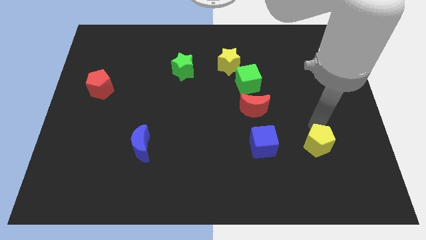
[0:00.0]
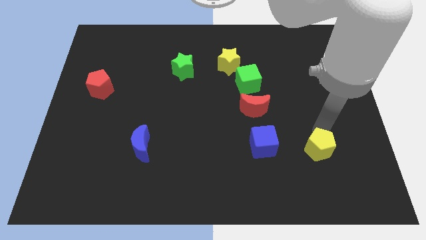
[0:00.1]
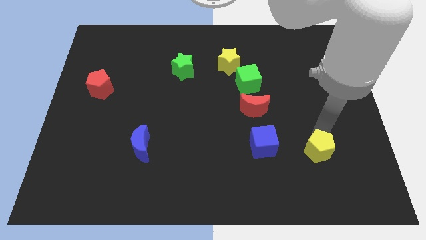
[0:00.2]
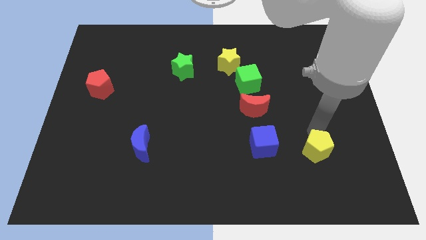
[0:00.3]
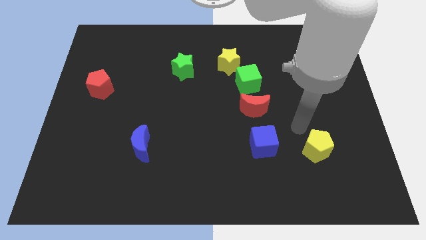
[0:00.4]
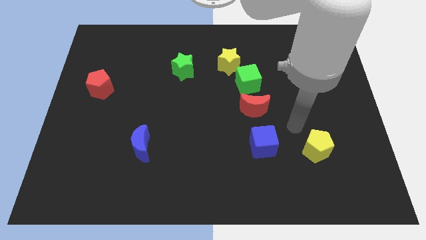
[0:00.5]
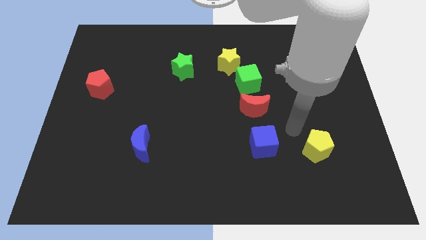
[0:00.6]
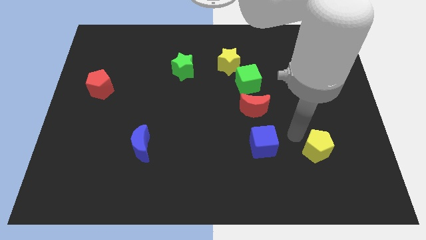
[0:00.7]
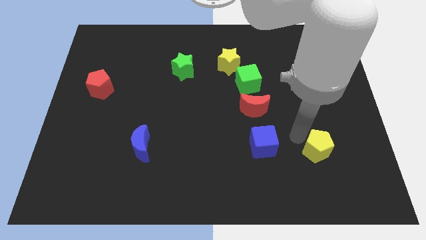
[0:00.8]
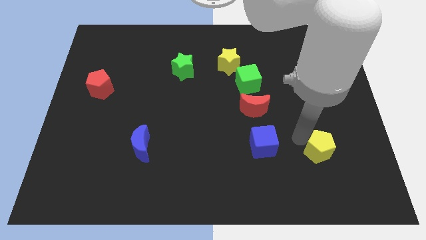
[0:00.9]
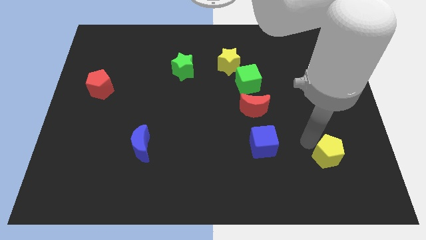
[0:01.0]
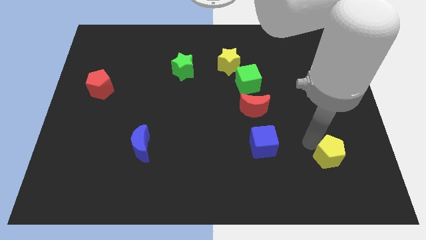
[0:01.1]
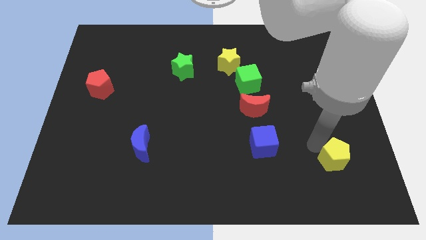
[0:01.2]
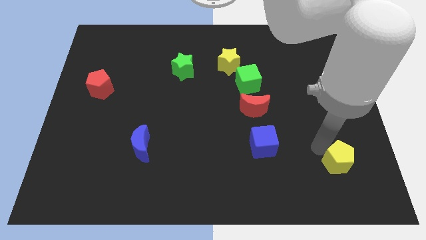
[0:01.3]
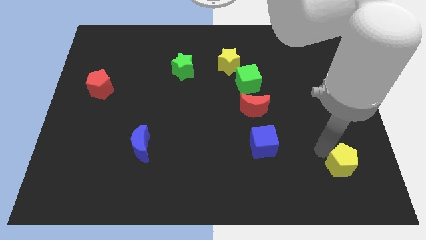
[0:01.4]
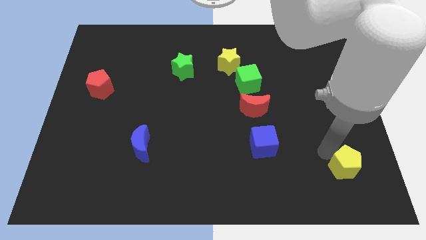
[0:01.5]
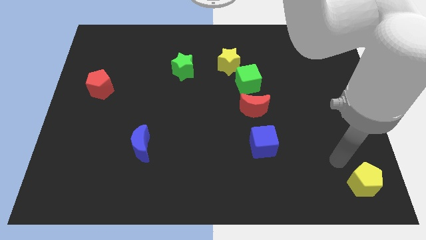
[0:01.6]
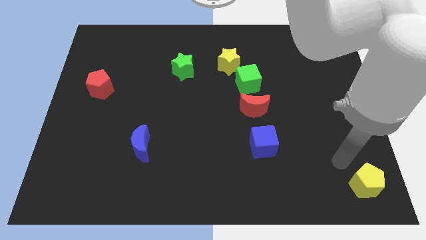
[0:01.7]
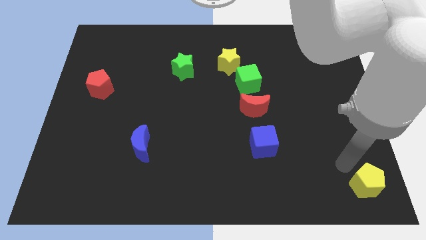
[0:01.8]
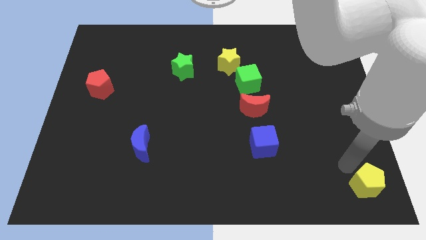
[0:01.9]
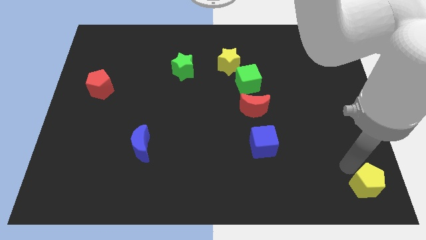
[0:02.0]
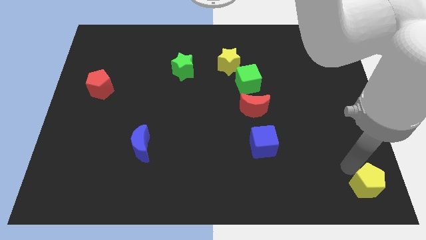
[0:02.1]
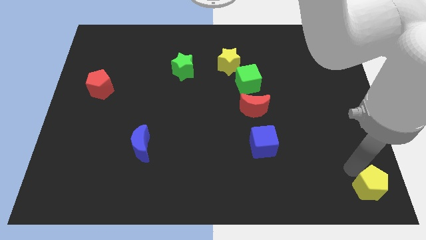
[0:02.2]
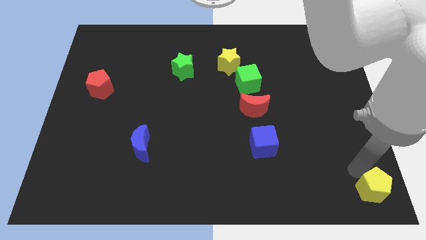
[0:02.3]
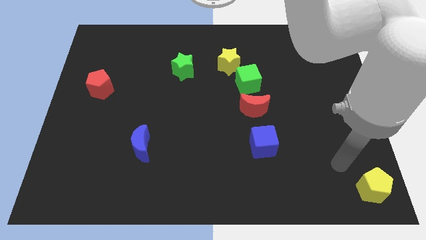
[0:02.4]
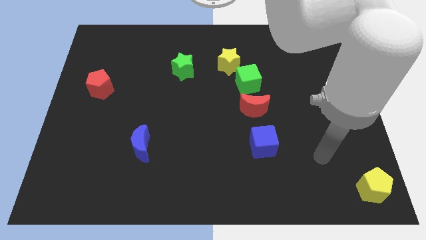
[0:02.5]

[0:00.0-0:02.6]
slide the yellow pentagon to the bottom right side of the board

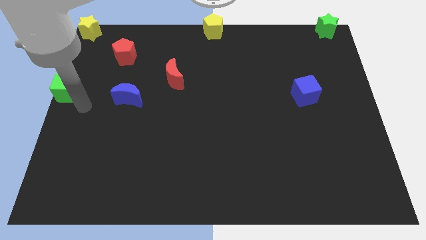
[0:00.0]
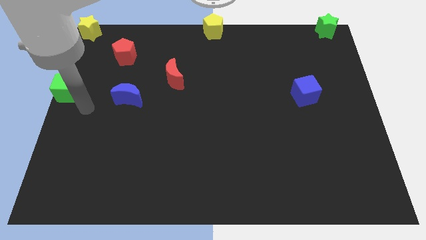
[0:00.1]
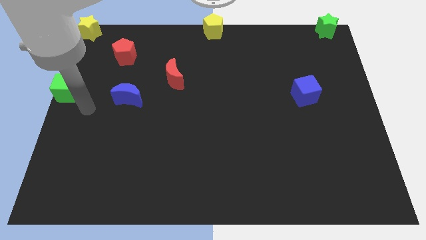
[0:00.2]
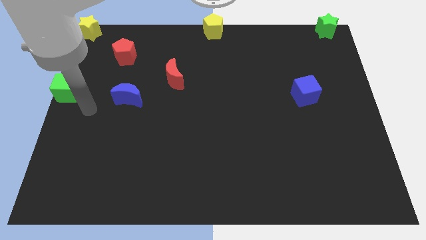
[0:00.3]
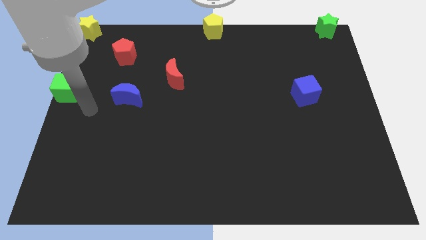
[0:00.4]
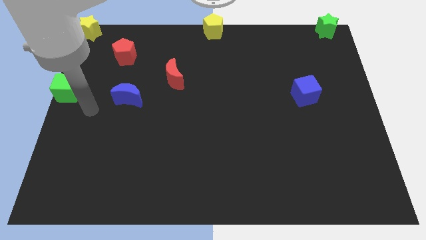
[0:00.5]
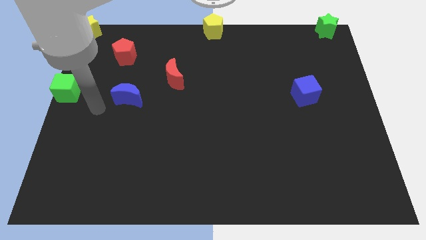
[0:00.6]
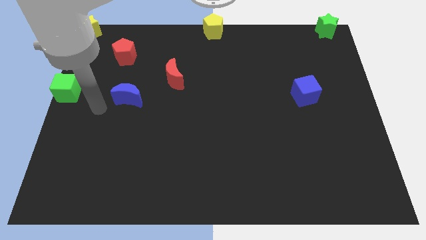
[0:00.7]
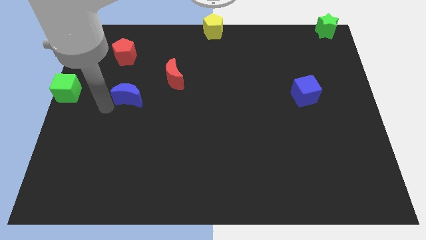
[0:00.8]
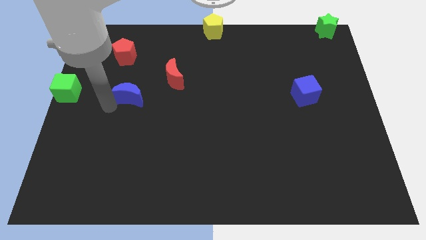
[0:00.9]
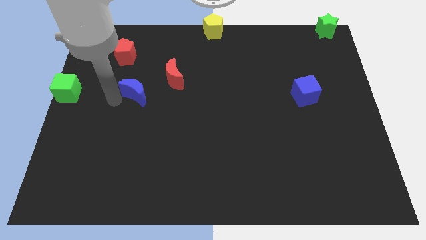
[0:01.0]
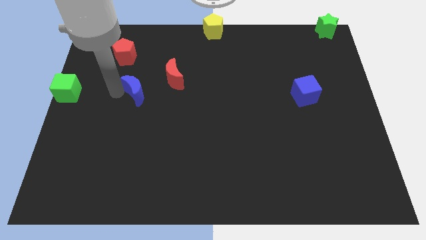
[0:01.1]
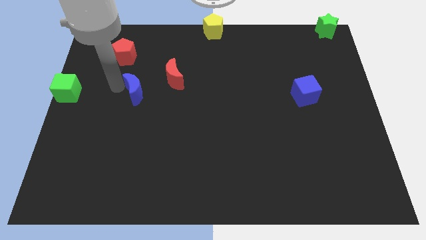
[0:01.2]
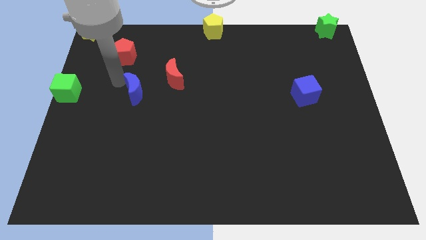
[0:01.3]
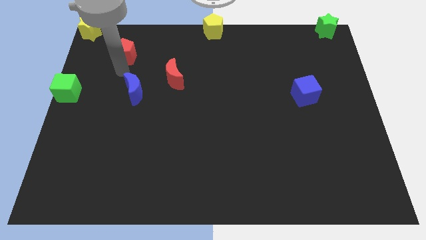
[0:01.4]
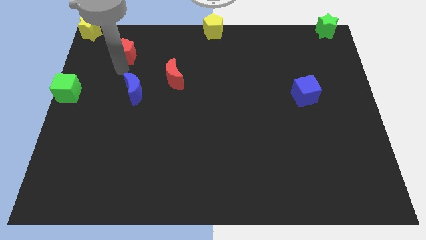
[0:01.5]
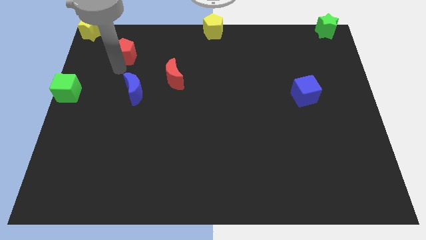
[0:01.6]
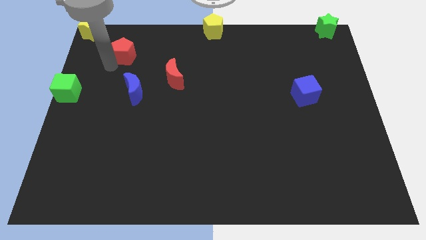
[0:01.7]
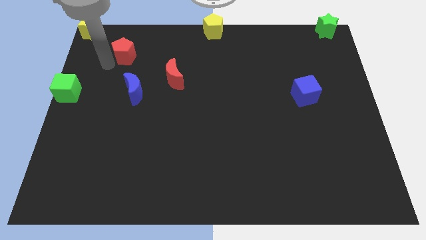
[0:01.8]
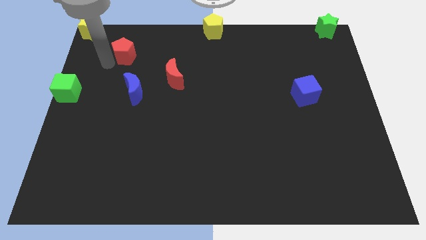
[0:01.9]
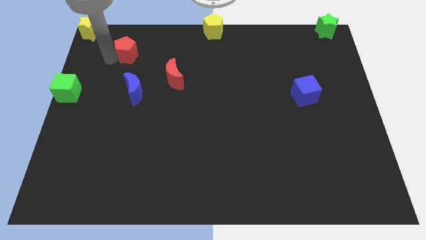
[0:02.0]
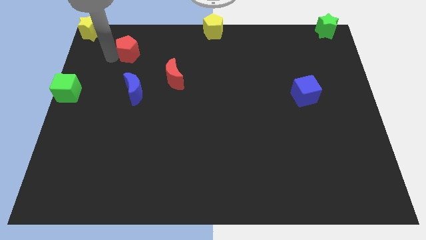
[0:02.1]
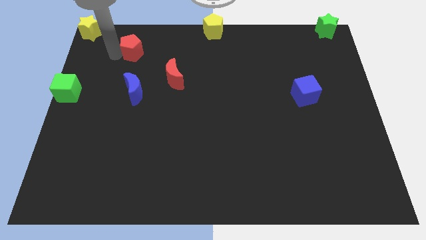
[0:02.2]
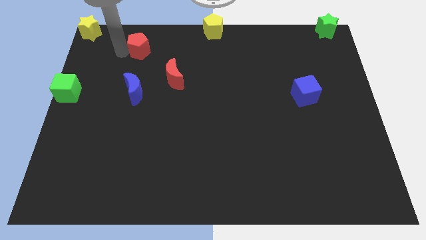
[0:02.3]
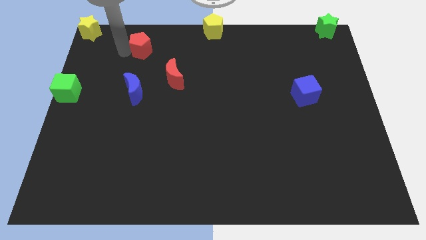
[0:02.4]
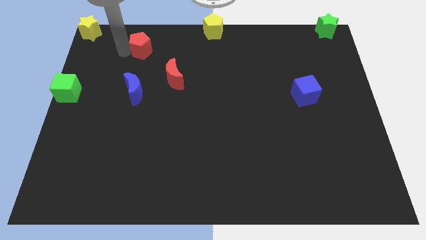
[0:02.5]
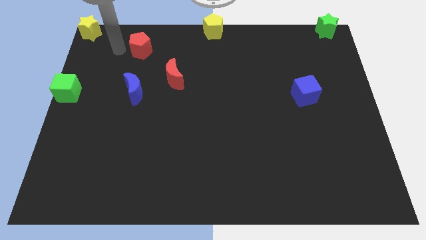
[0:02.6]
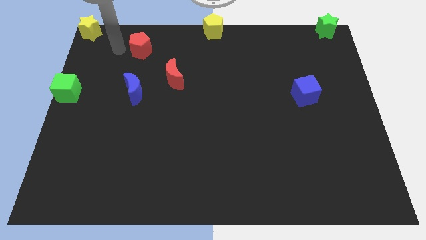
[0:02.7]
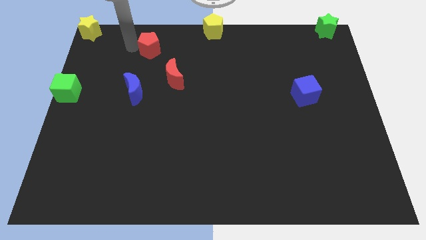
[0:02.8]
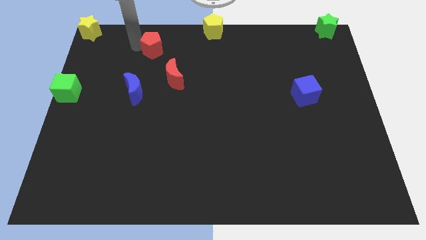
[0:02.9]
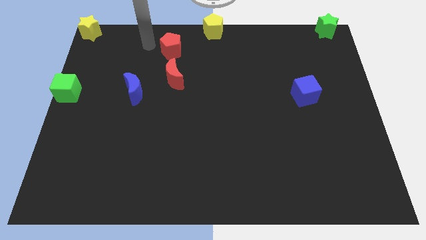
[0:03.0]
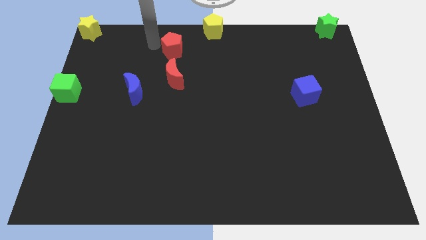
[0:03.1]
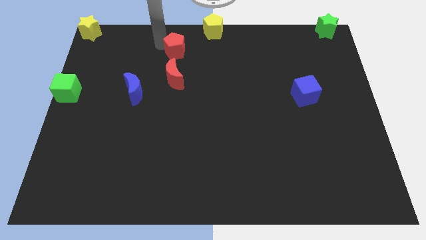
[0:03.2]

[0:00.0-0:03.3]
push red pentagon above red crescent

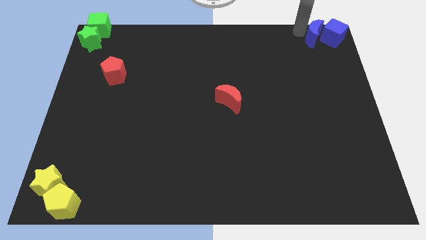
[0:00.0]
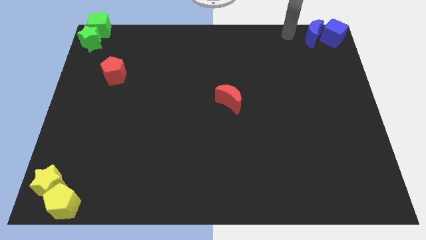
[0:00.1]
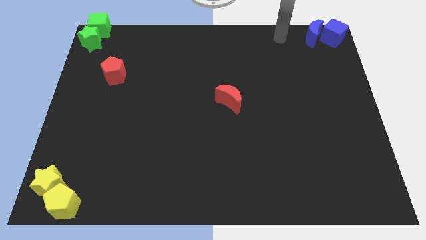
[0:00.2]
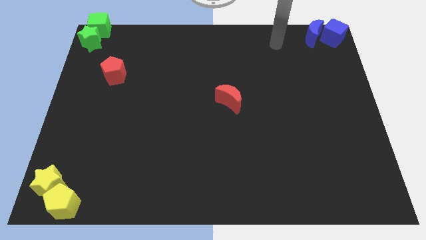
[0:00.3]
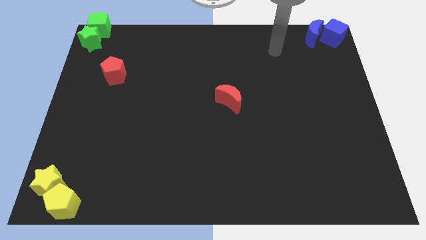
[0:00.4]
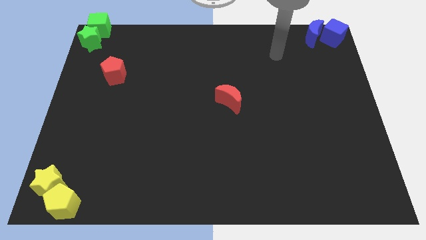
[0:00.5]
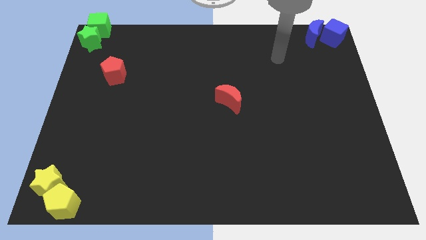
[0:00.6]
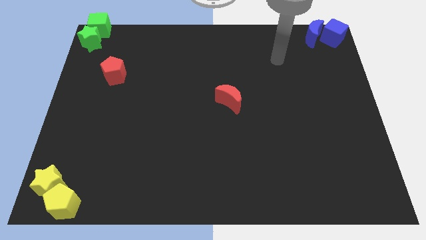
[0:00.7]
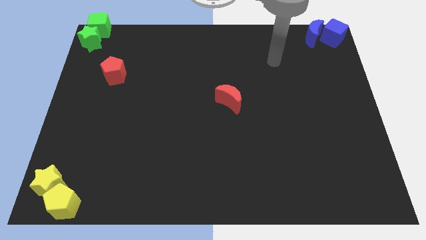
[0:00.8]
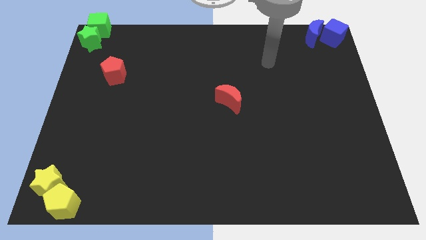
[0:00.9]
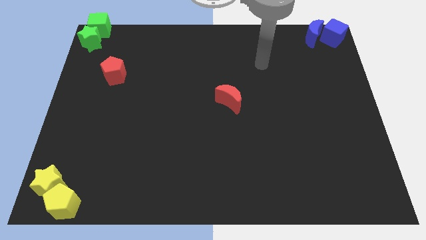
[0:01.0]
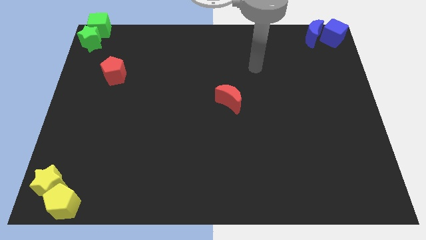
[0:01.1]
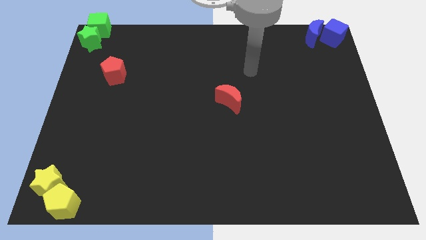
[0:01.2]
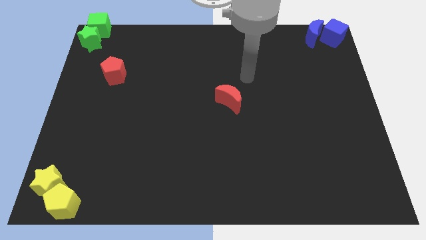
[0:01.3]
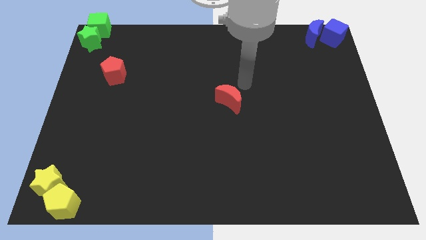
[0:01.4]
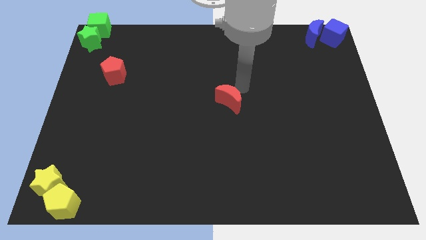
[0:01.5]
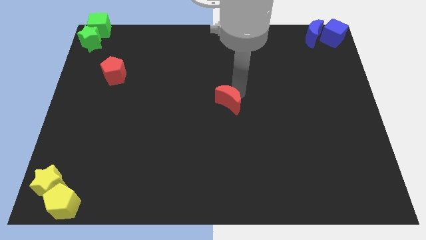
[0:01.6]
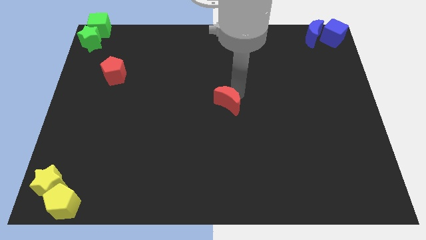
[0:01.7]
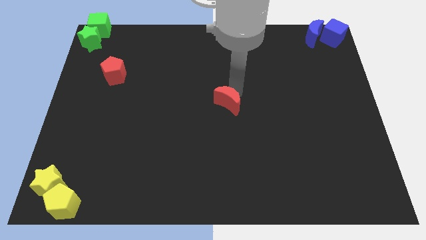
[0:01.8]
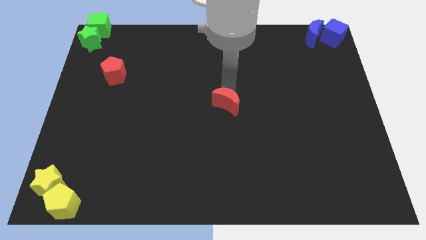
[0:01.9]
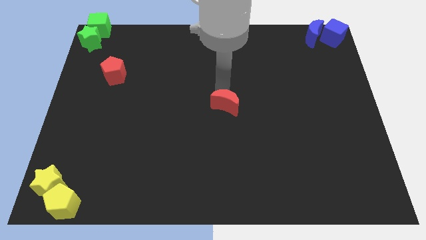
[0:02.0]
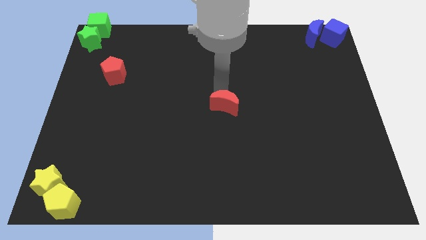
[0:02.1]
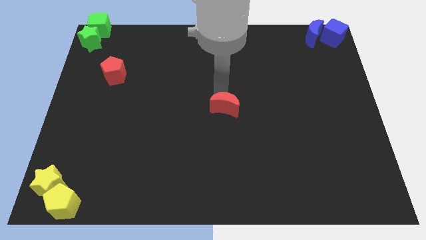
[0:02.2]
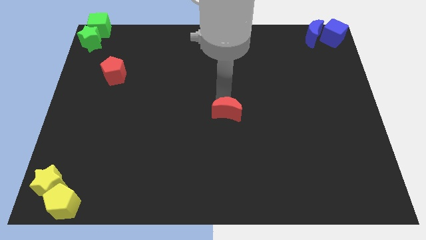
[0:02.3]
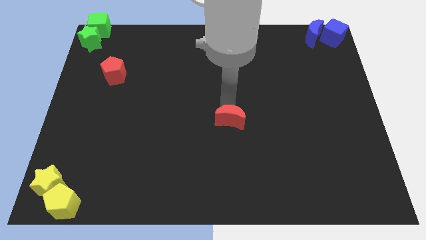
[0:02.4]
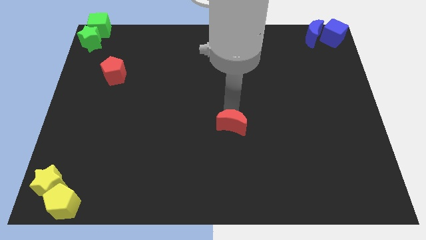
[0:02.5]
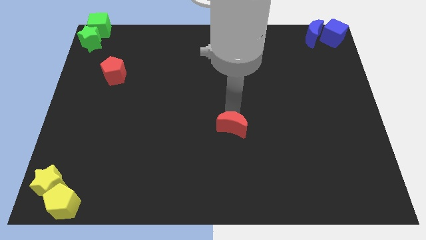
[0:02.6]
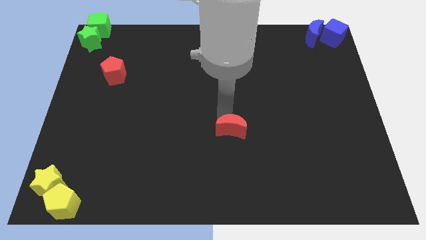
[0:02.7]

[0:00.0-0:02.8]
move the red moon to the center

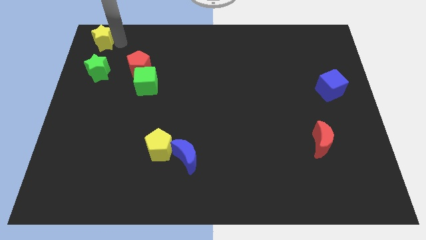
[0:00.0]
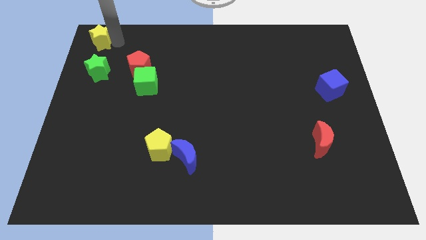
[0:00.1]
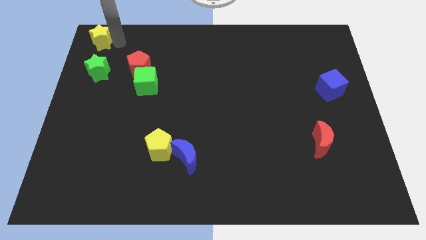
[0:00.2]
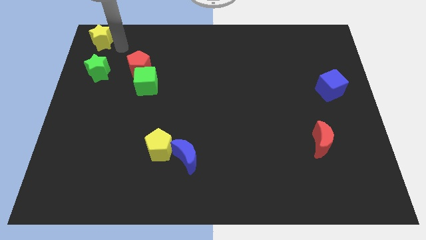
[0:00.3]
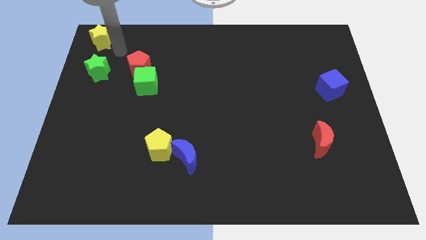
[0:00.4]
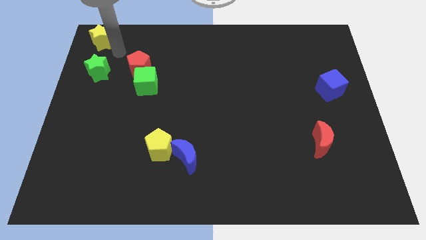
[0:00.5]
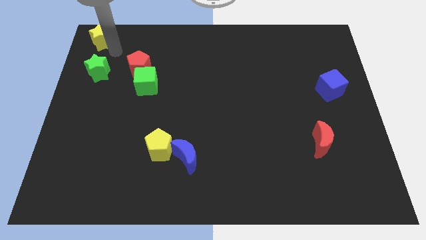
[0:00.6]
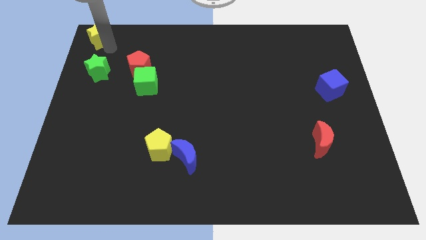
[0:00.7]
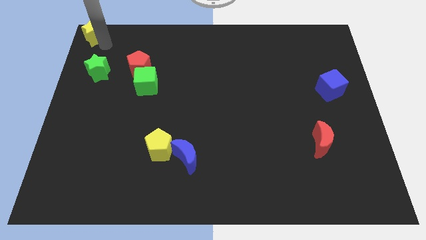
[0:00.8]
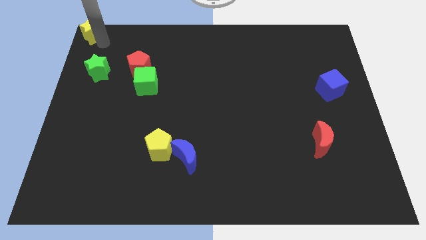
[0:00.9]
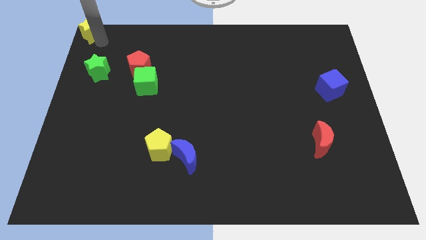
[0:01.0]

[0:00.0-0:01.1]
move yellow star to the top left coner
